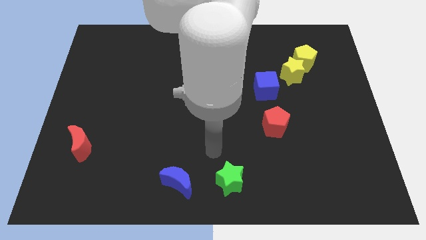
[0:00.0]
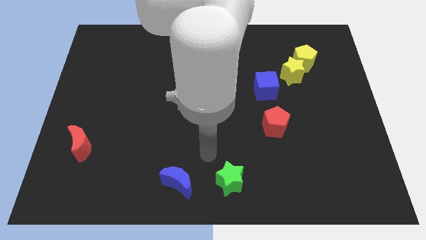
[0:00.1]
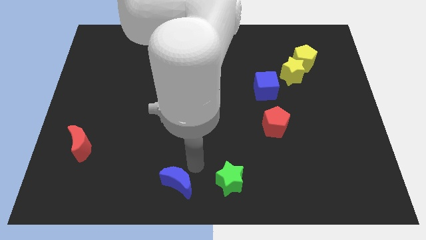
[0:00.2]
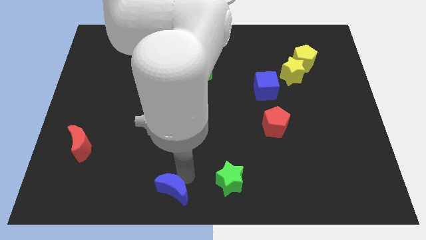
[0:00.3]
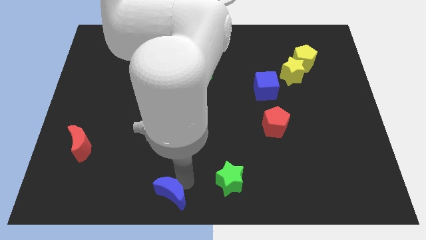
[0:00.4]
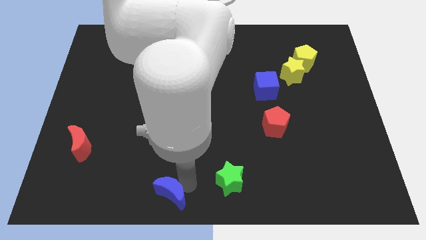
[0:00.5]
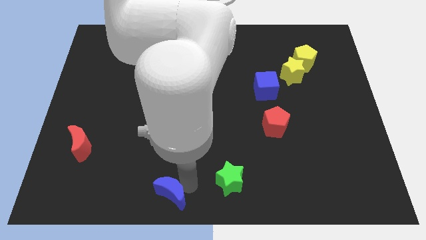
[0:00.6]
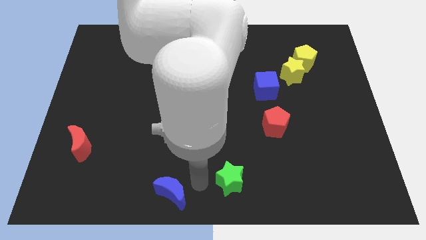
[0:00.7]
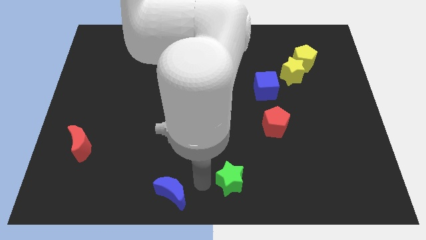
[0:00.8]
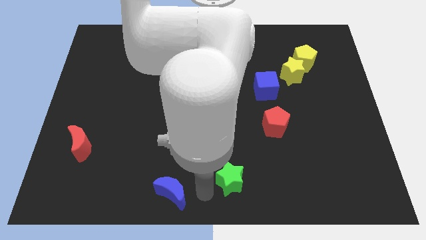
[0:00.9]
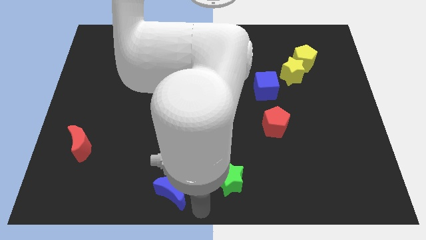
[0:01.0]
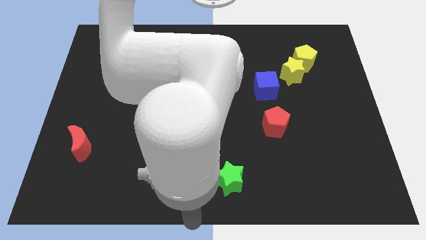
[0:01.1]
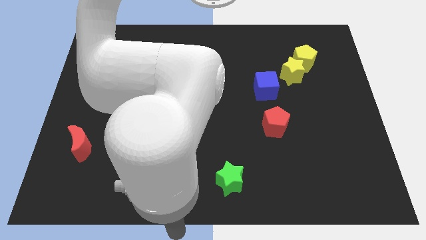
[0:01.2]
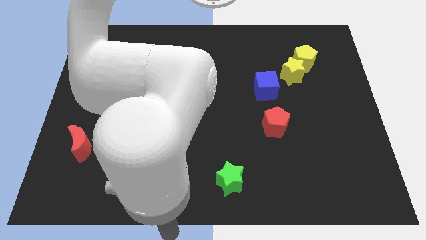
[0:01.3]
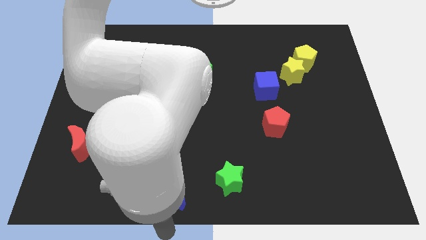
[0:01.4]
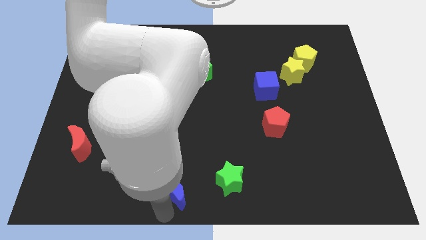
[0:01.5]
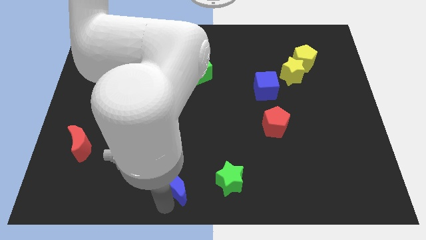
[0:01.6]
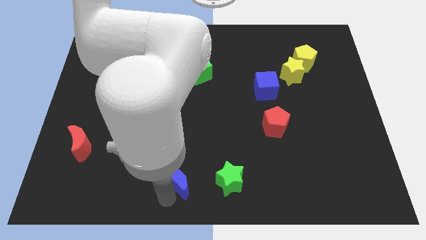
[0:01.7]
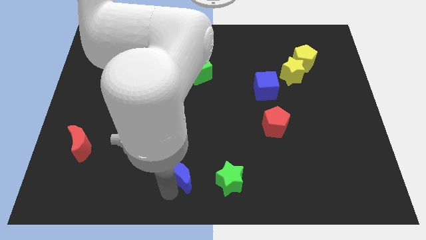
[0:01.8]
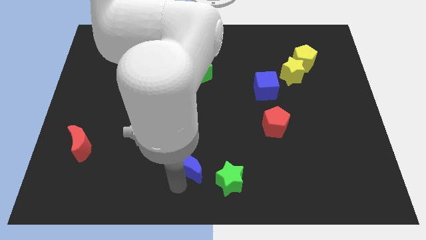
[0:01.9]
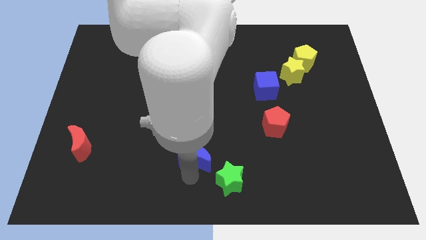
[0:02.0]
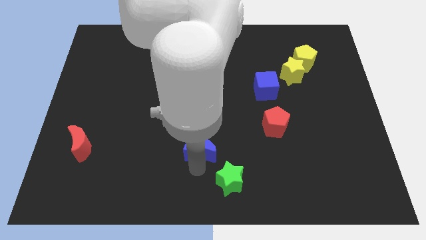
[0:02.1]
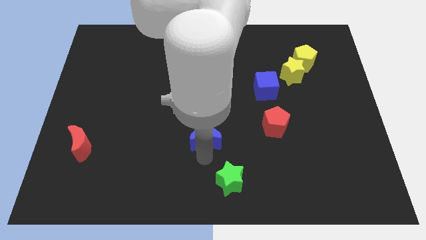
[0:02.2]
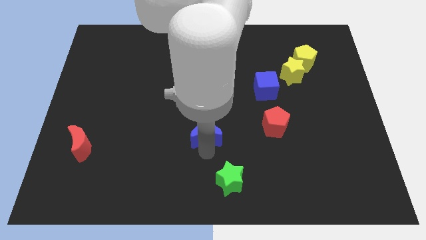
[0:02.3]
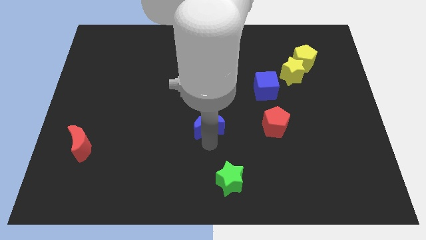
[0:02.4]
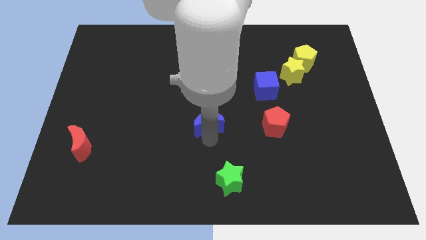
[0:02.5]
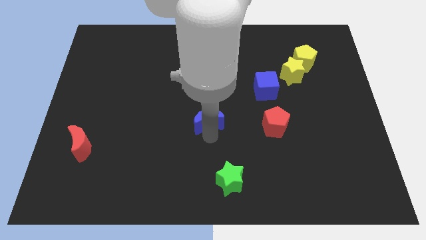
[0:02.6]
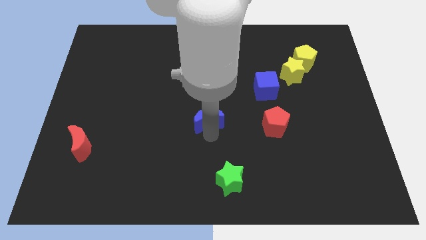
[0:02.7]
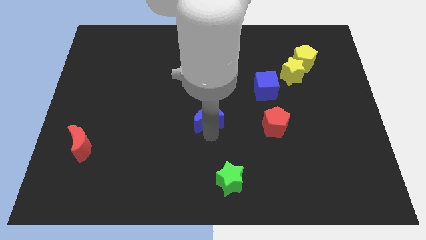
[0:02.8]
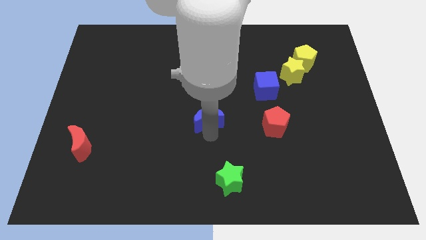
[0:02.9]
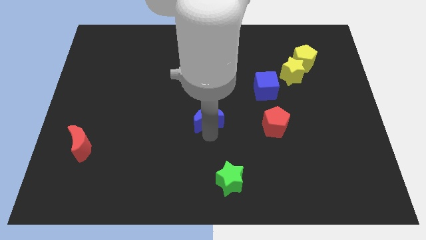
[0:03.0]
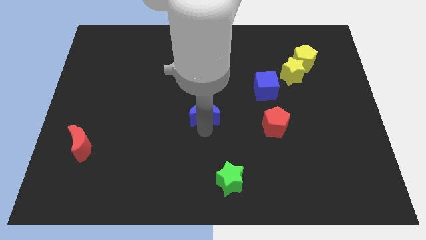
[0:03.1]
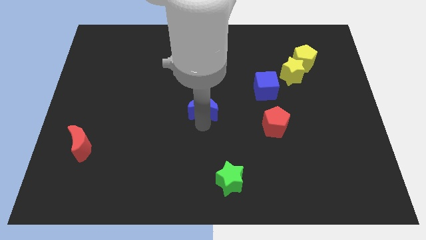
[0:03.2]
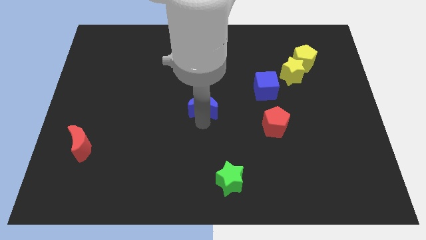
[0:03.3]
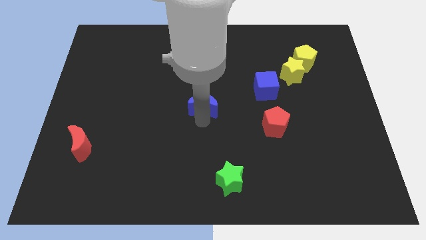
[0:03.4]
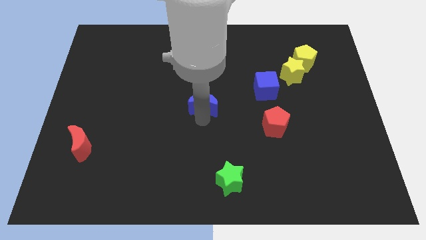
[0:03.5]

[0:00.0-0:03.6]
move the blue crescent diagonally on the top left side of the green star

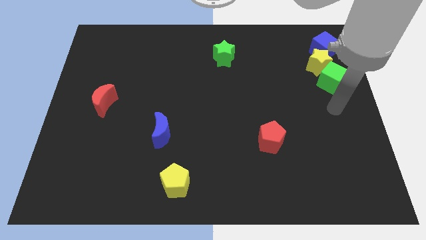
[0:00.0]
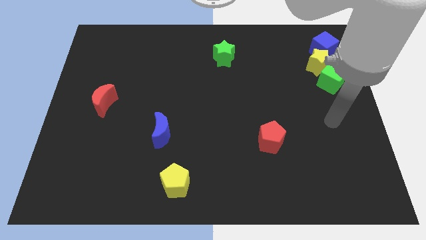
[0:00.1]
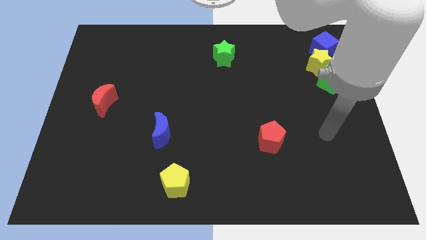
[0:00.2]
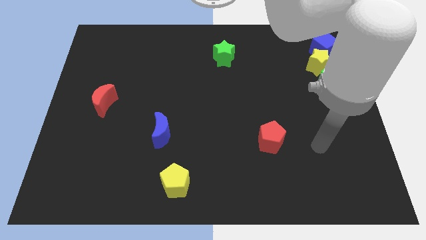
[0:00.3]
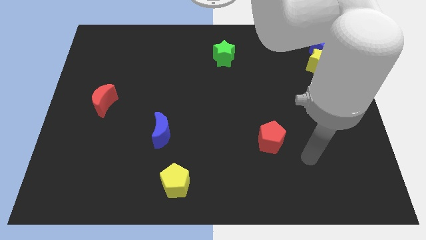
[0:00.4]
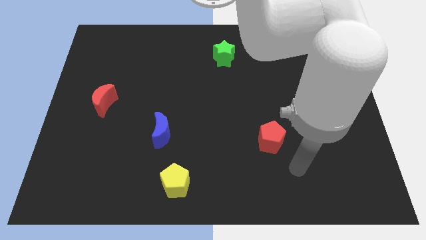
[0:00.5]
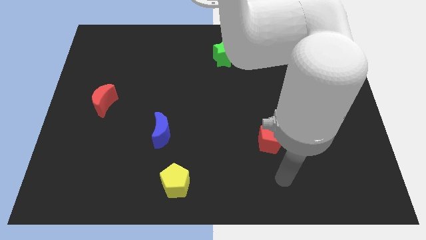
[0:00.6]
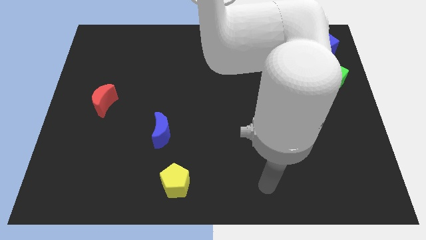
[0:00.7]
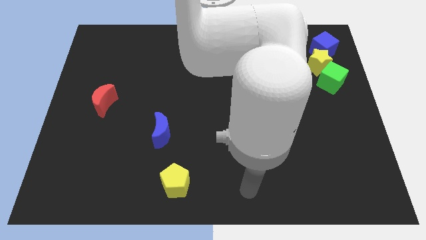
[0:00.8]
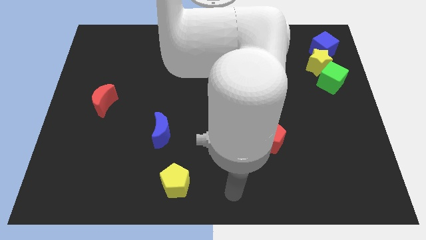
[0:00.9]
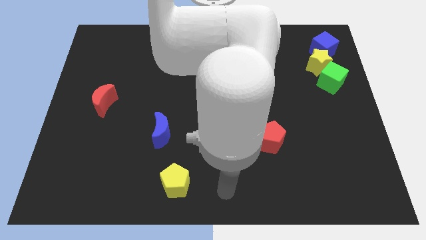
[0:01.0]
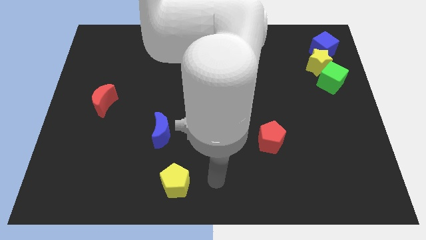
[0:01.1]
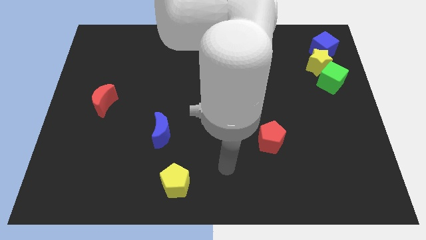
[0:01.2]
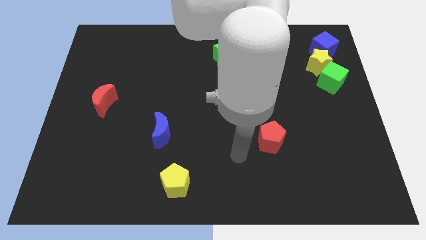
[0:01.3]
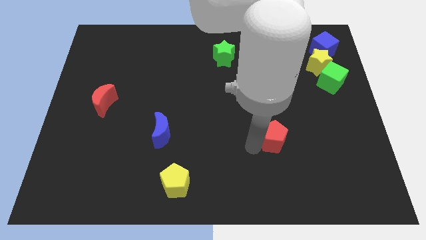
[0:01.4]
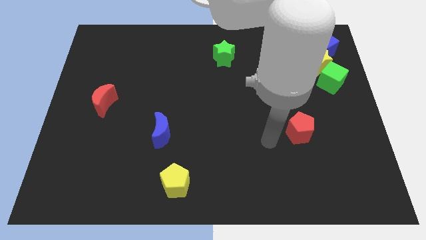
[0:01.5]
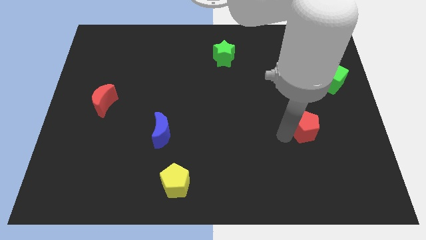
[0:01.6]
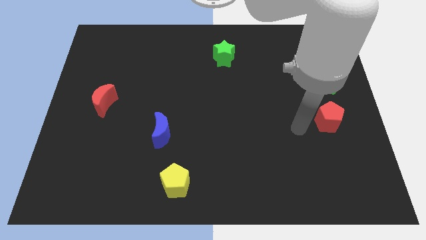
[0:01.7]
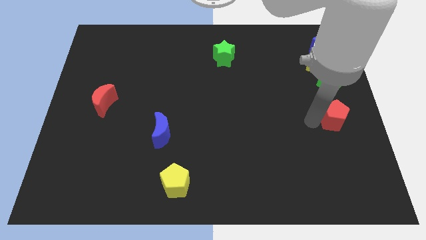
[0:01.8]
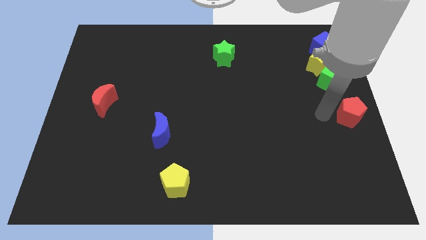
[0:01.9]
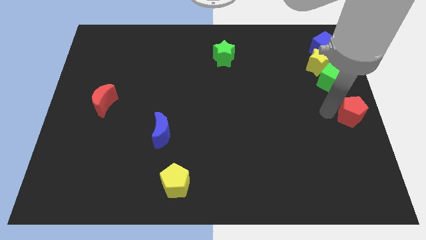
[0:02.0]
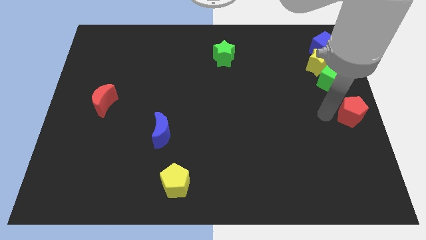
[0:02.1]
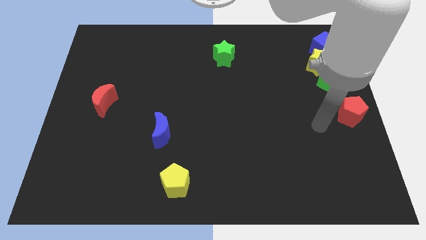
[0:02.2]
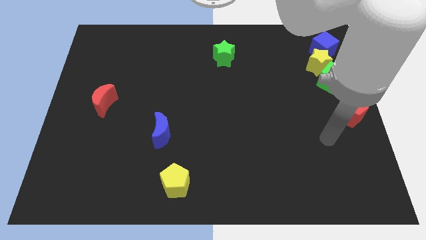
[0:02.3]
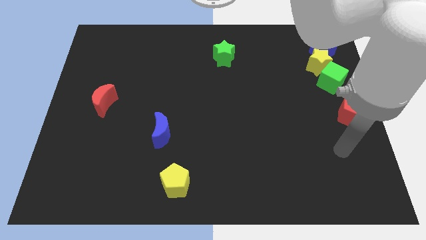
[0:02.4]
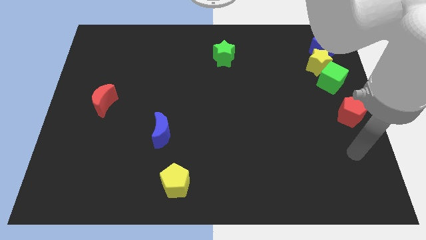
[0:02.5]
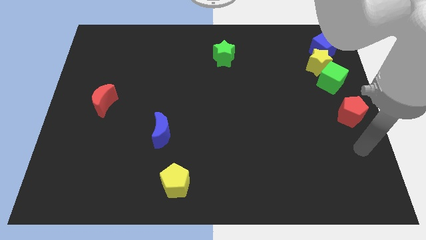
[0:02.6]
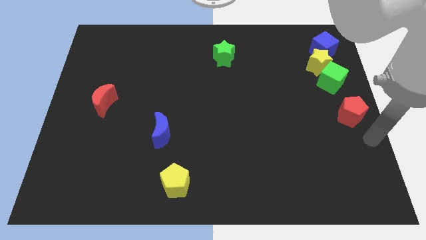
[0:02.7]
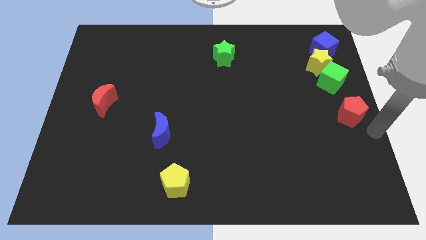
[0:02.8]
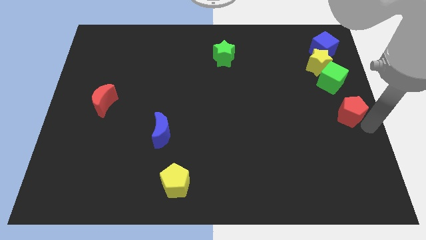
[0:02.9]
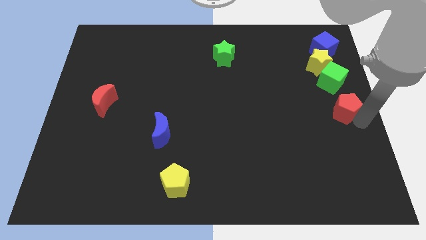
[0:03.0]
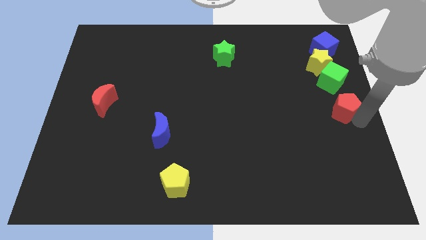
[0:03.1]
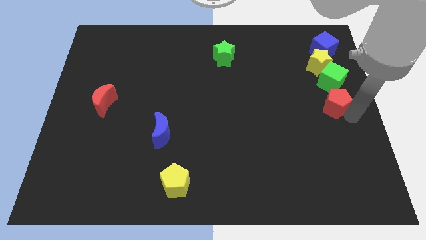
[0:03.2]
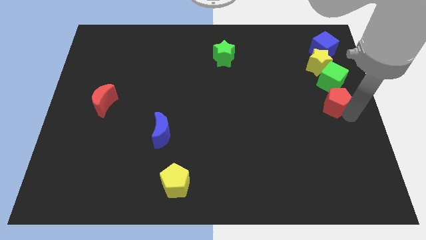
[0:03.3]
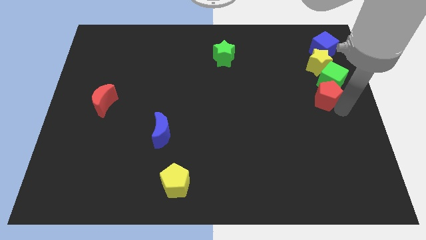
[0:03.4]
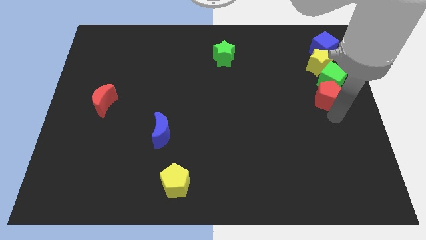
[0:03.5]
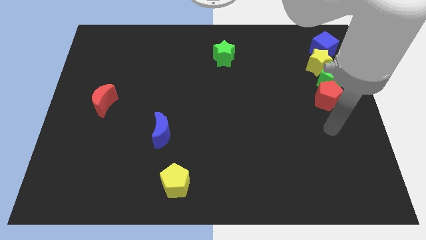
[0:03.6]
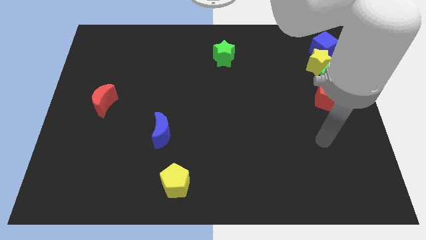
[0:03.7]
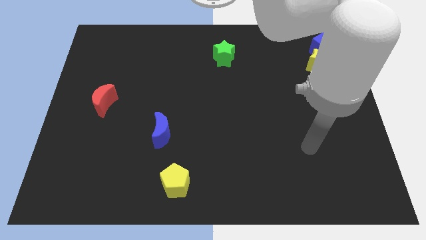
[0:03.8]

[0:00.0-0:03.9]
place the red pentagon below the green cube

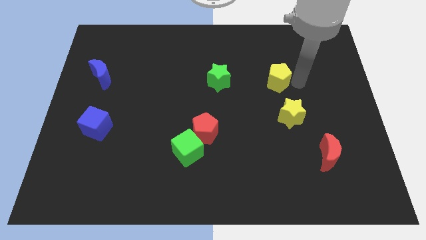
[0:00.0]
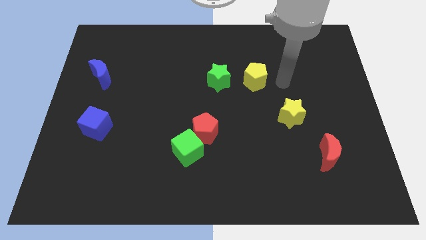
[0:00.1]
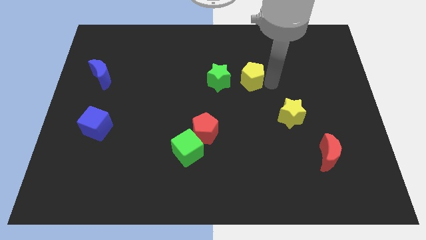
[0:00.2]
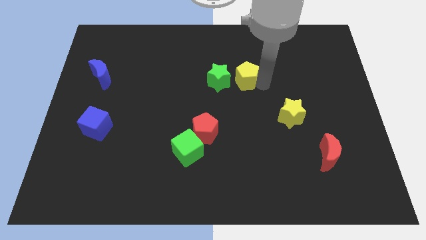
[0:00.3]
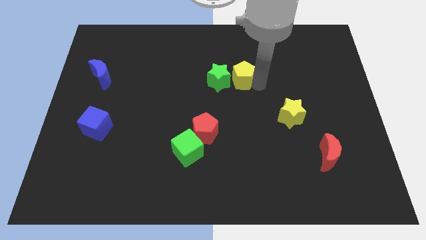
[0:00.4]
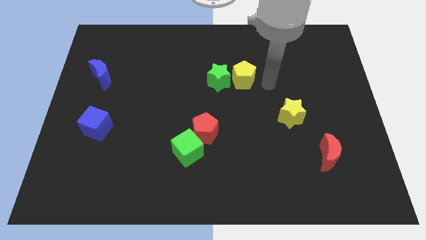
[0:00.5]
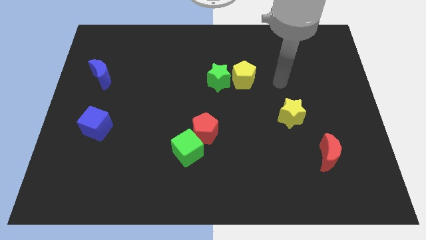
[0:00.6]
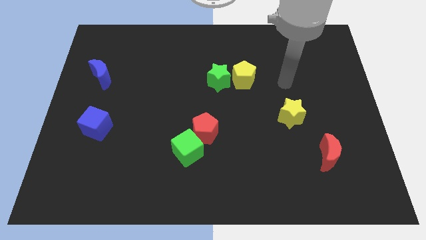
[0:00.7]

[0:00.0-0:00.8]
push the yellow pentagon to the right side of green star

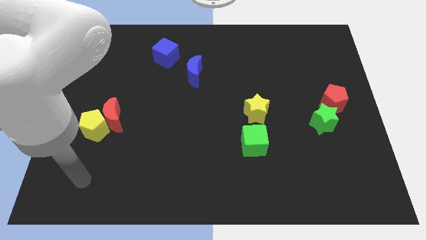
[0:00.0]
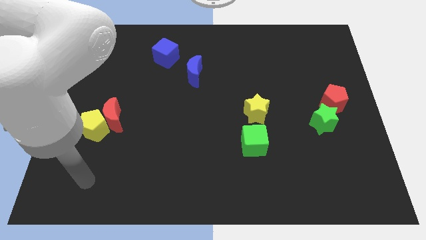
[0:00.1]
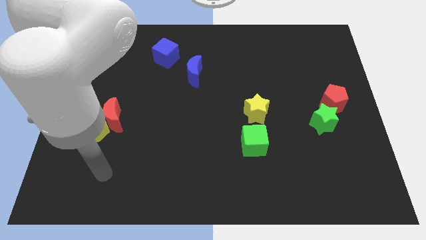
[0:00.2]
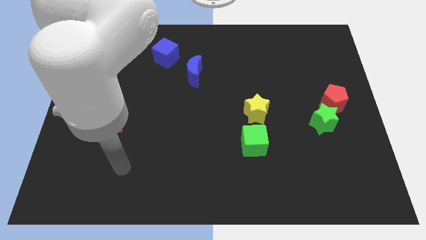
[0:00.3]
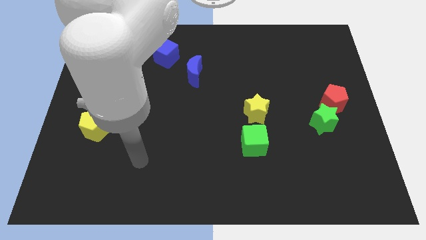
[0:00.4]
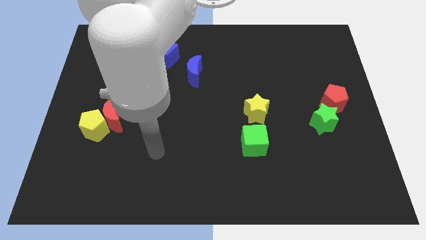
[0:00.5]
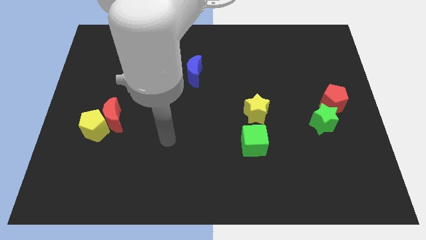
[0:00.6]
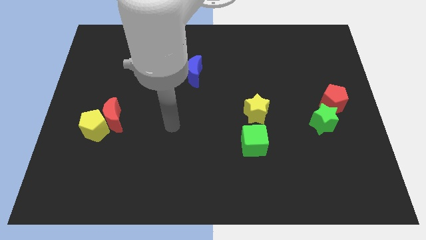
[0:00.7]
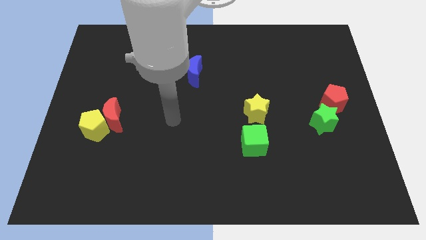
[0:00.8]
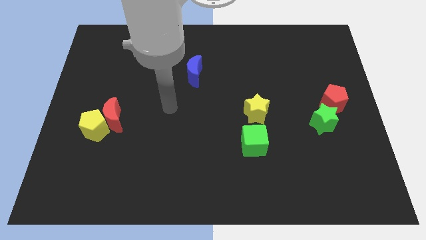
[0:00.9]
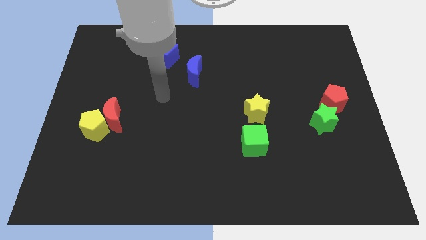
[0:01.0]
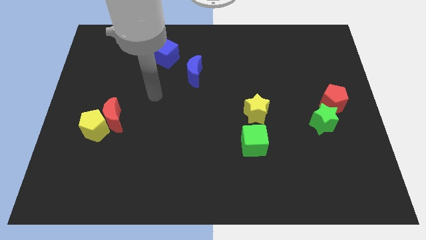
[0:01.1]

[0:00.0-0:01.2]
point your hand below the blue cube
